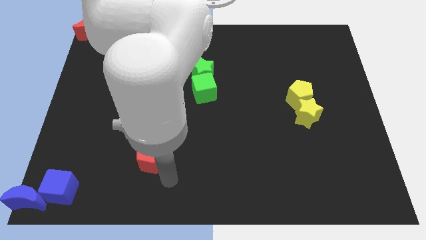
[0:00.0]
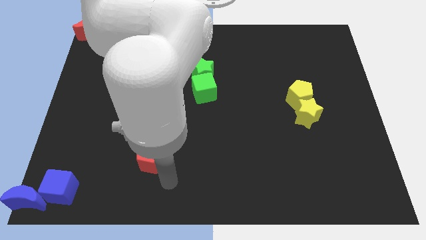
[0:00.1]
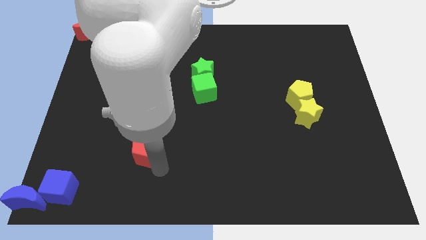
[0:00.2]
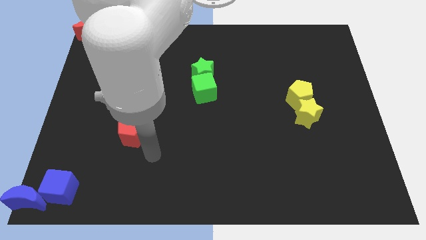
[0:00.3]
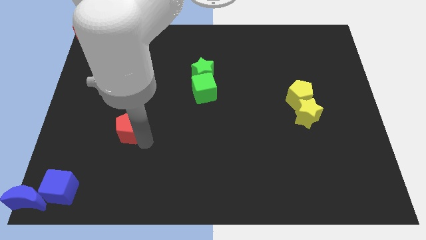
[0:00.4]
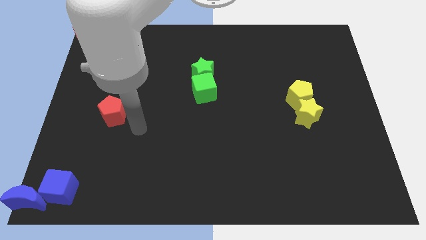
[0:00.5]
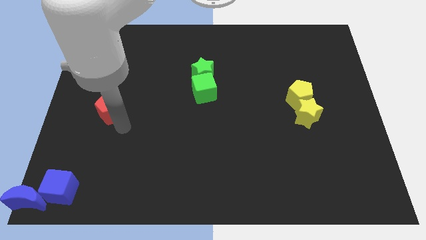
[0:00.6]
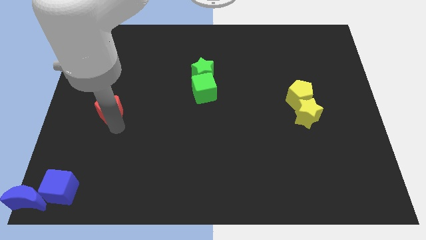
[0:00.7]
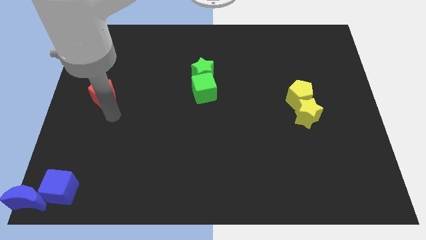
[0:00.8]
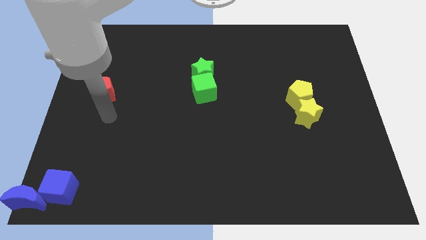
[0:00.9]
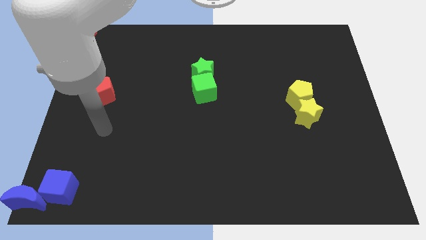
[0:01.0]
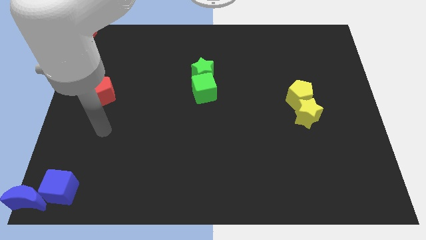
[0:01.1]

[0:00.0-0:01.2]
place the red pentagon towards the red crescent

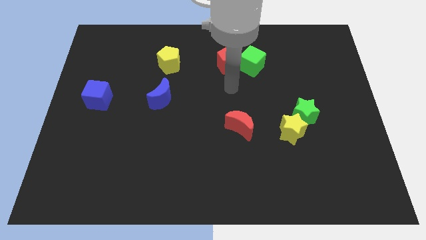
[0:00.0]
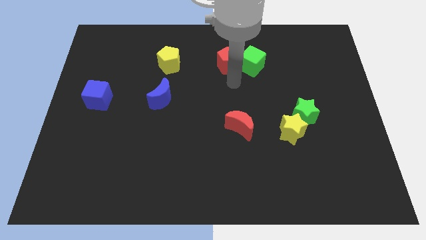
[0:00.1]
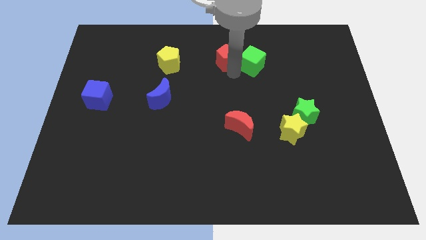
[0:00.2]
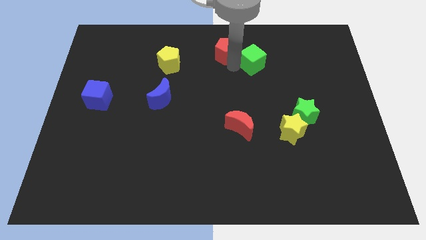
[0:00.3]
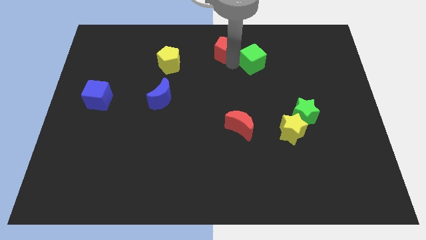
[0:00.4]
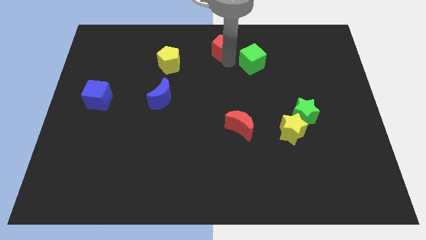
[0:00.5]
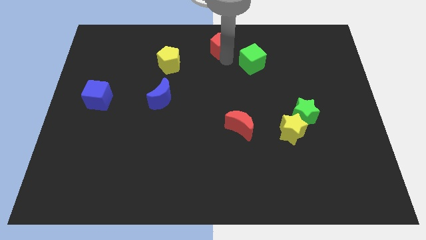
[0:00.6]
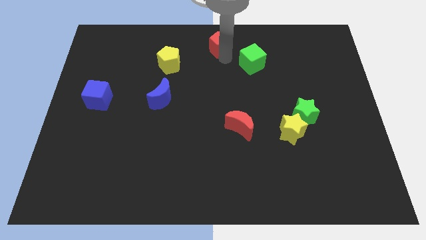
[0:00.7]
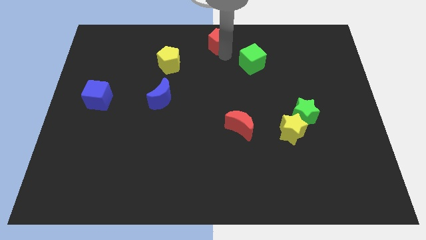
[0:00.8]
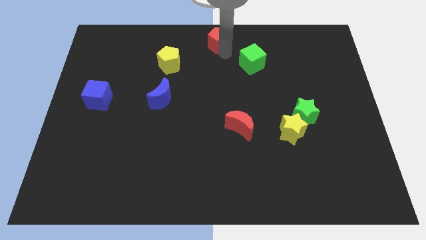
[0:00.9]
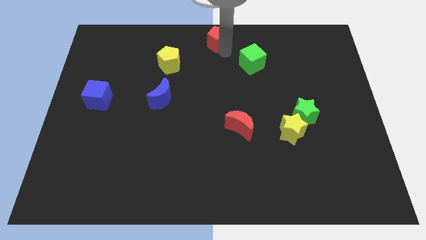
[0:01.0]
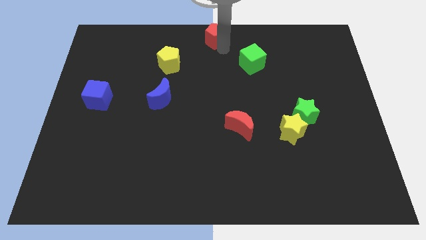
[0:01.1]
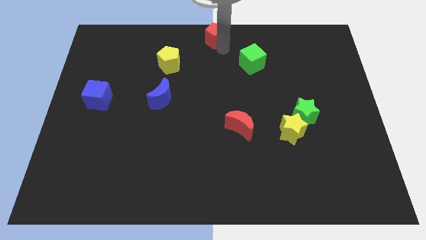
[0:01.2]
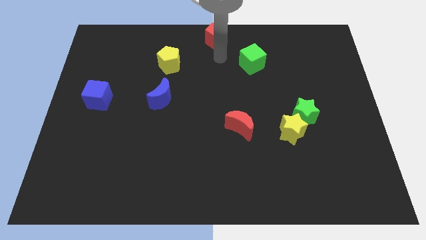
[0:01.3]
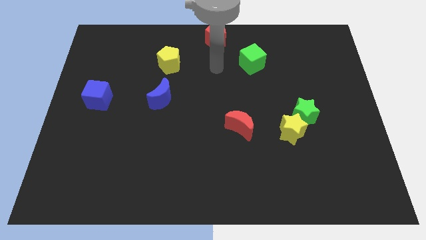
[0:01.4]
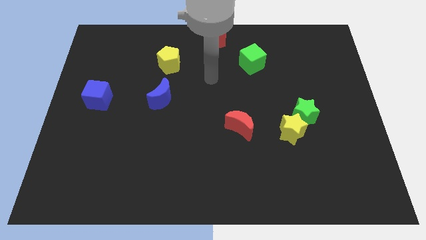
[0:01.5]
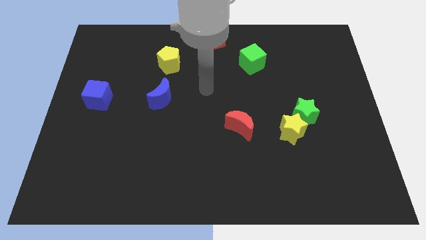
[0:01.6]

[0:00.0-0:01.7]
move red pentagon to the top center of the board

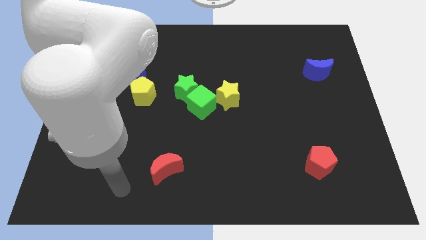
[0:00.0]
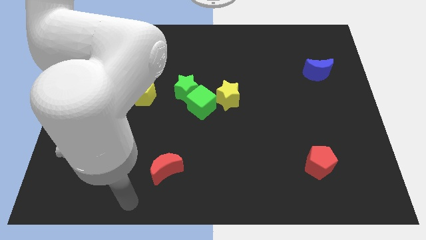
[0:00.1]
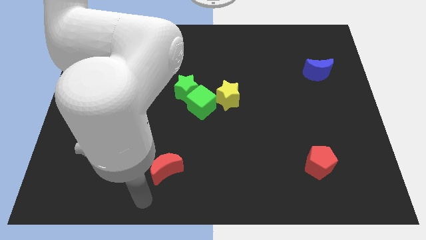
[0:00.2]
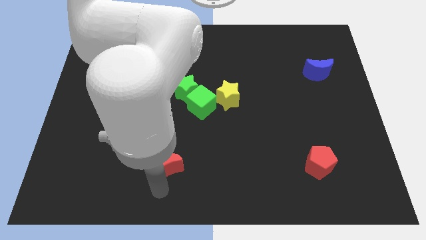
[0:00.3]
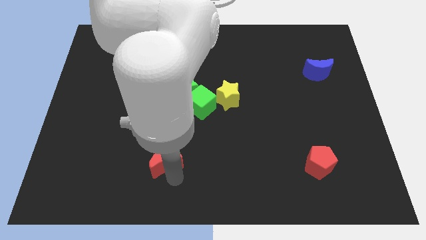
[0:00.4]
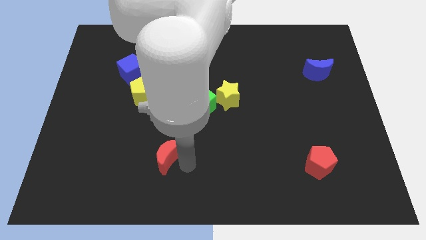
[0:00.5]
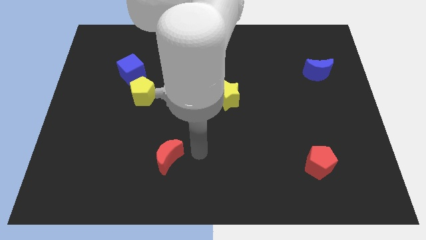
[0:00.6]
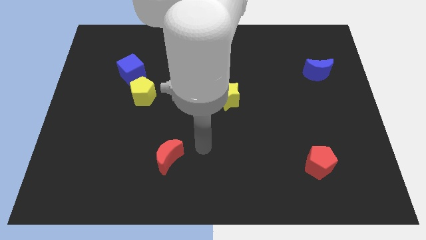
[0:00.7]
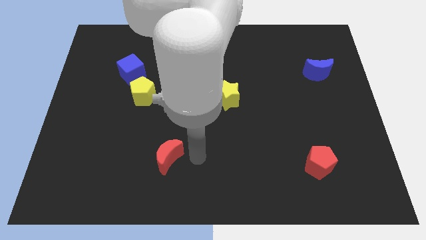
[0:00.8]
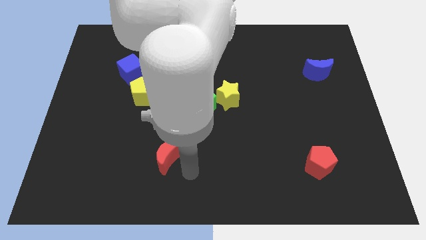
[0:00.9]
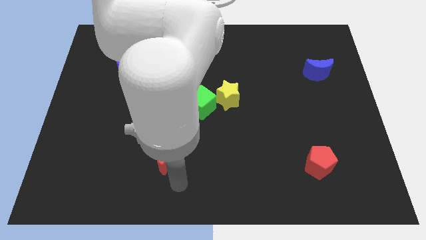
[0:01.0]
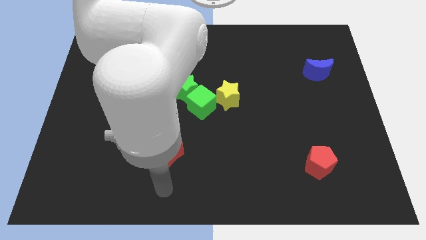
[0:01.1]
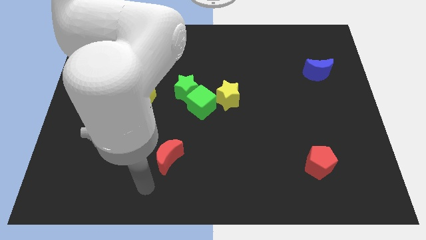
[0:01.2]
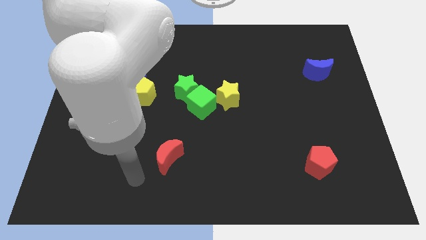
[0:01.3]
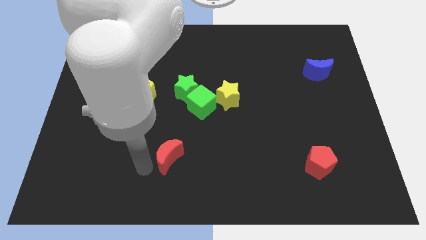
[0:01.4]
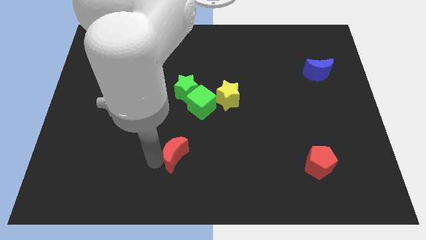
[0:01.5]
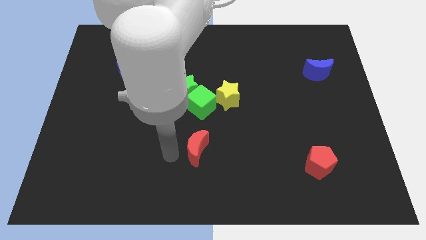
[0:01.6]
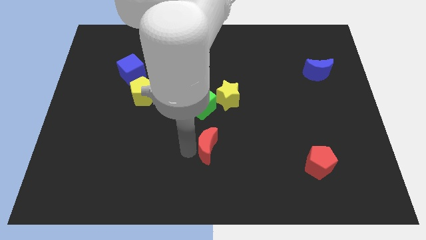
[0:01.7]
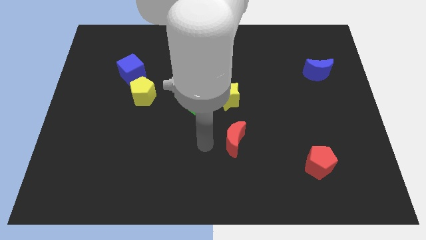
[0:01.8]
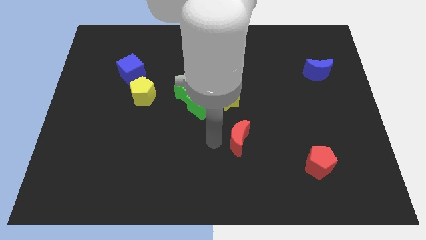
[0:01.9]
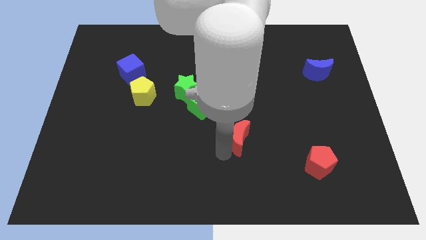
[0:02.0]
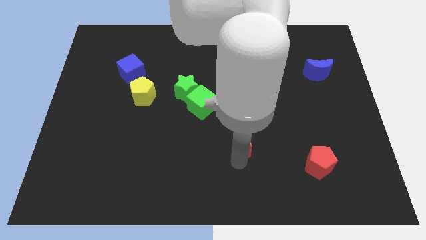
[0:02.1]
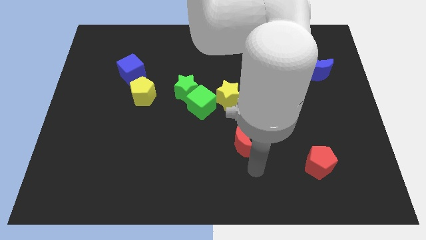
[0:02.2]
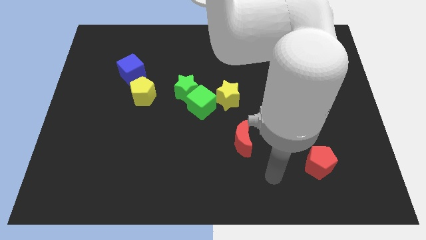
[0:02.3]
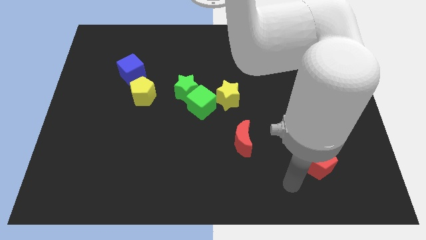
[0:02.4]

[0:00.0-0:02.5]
place the red moon below the yellow star

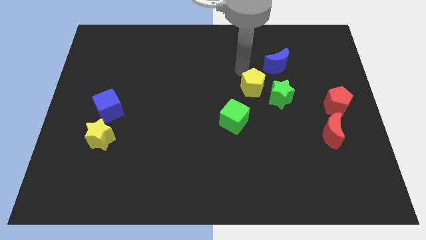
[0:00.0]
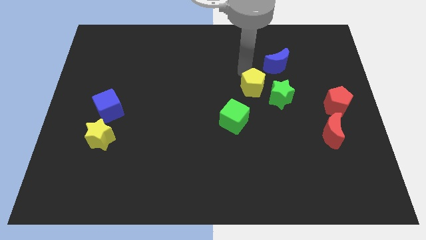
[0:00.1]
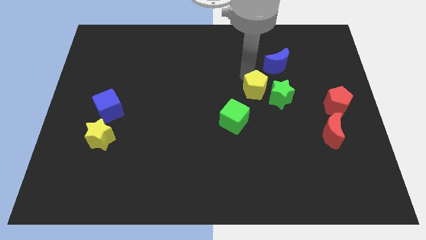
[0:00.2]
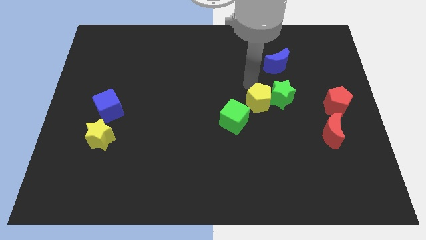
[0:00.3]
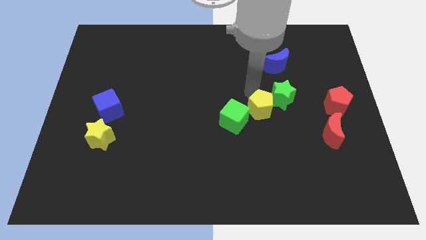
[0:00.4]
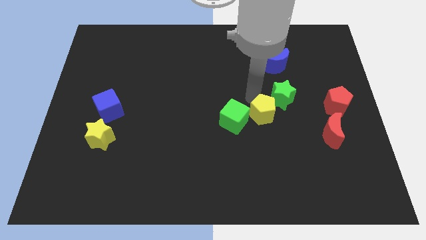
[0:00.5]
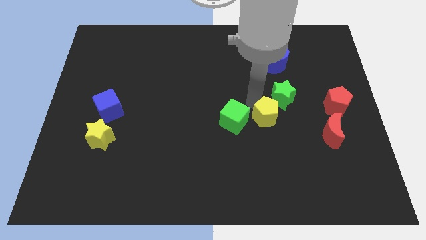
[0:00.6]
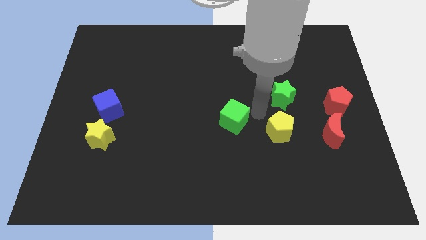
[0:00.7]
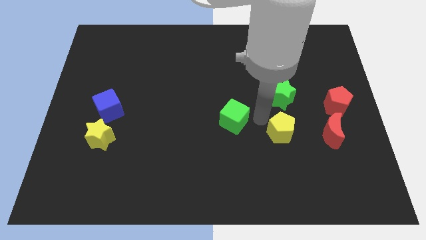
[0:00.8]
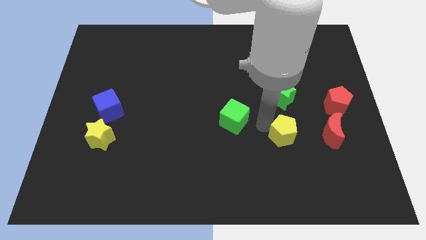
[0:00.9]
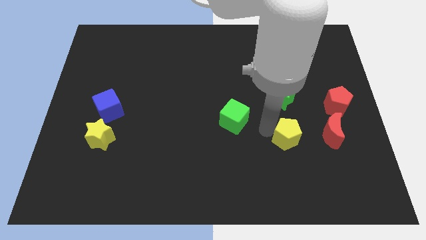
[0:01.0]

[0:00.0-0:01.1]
push the yellow pentagon to the bottom of the green star

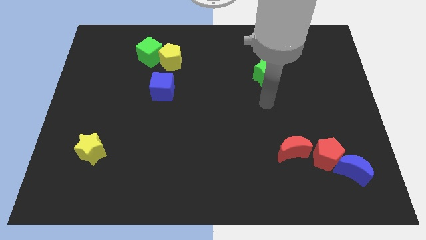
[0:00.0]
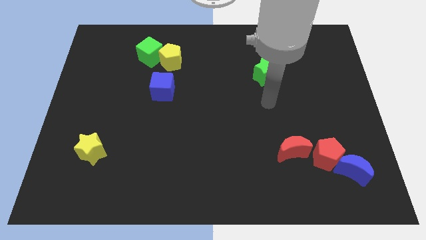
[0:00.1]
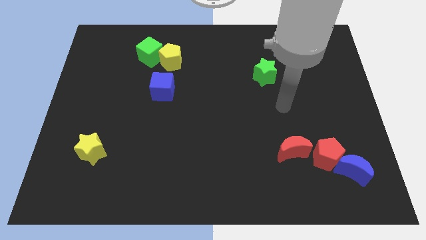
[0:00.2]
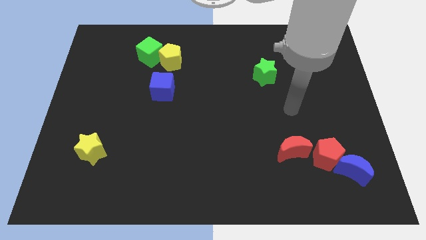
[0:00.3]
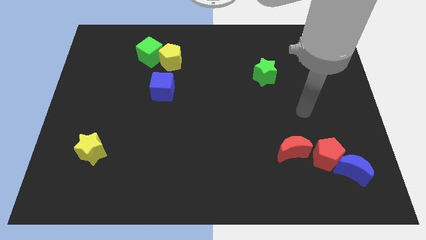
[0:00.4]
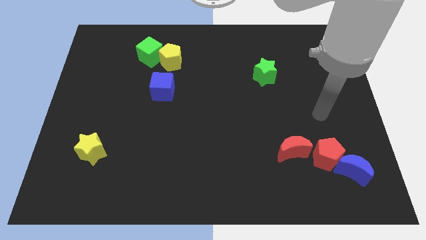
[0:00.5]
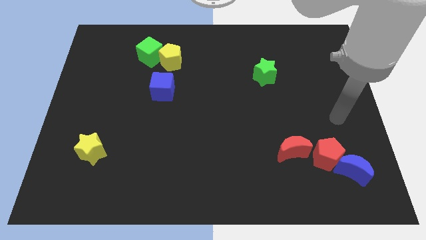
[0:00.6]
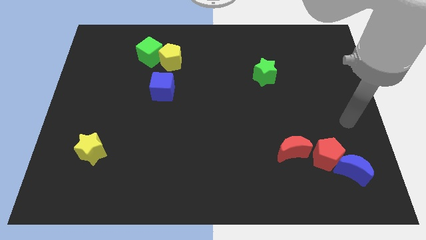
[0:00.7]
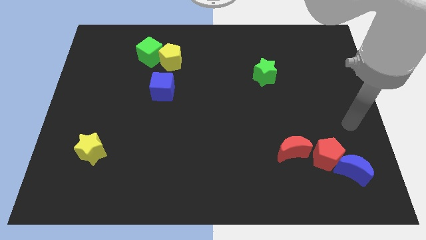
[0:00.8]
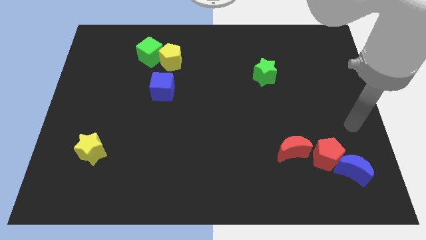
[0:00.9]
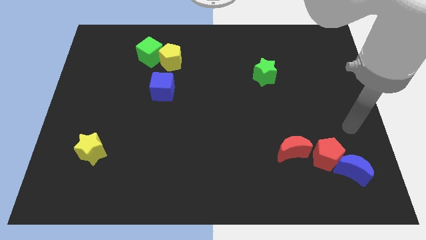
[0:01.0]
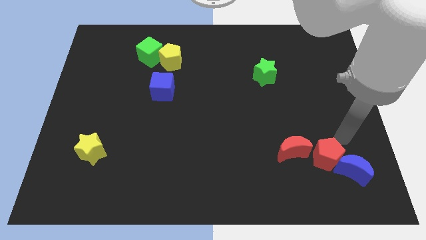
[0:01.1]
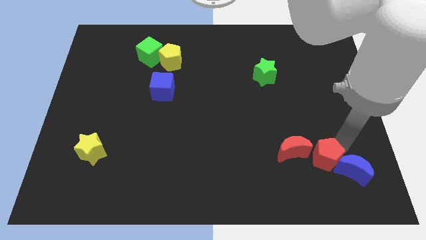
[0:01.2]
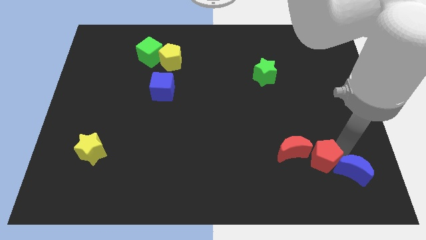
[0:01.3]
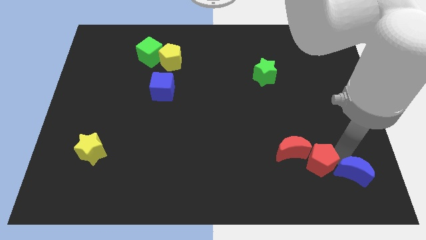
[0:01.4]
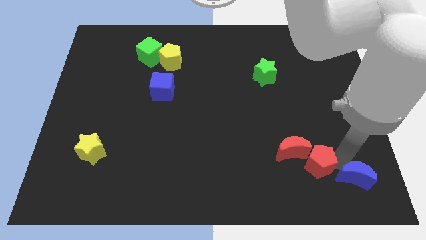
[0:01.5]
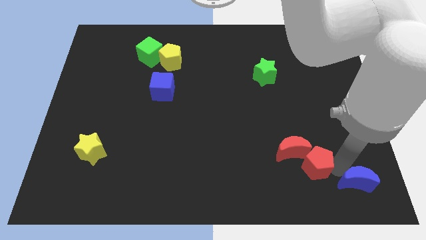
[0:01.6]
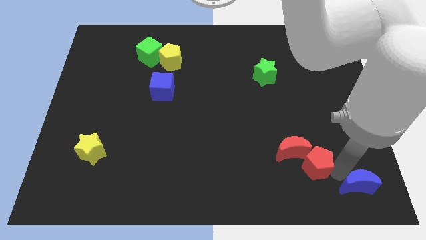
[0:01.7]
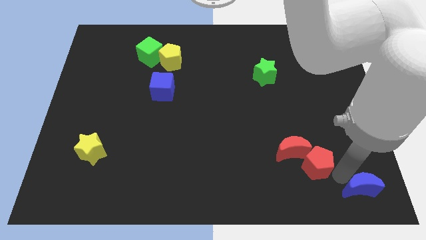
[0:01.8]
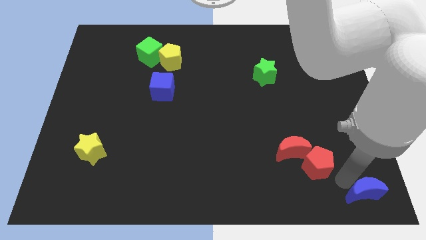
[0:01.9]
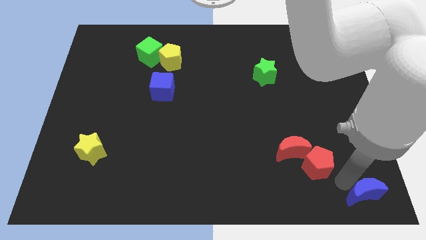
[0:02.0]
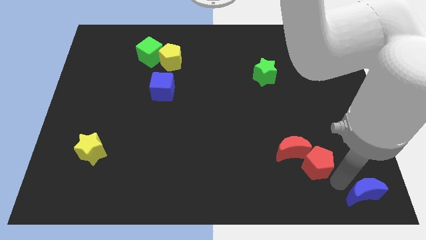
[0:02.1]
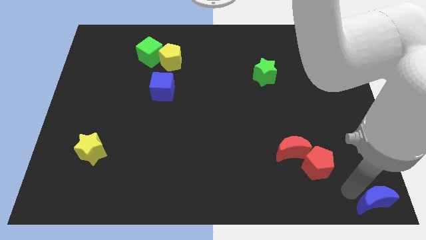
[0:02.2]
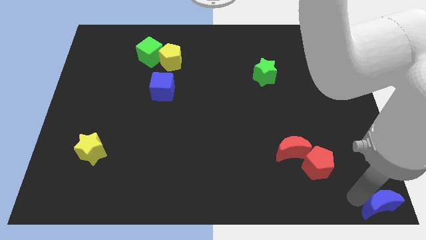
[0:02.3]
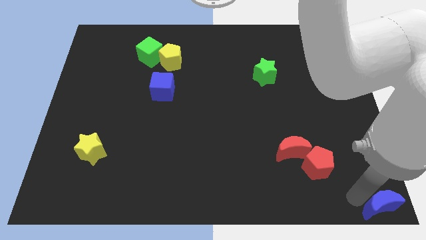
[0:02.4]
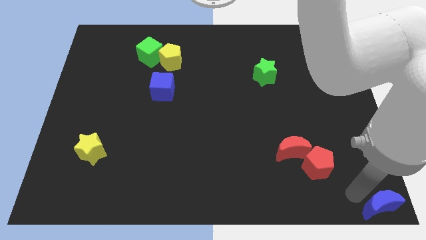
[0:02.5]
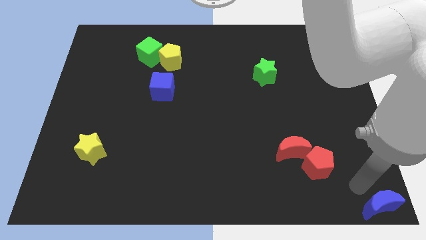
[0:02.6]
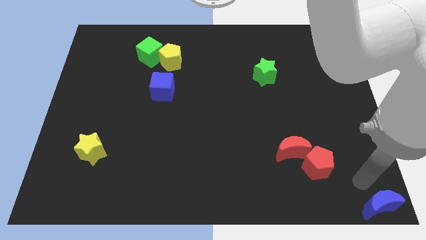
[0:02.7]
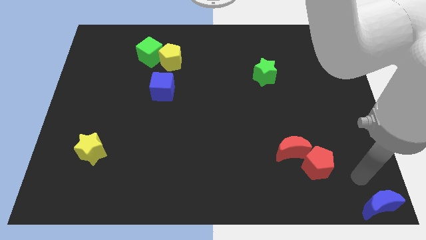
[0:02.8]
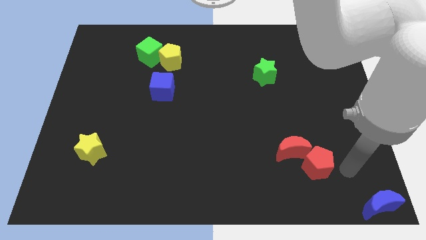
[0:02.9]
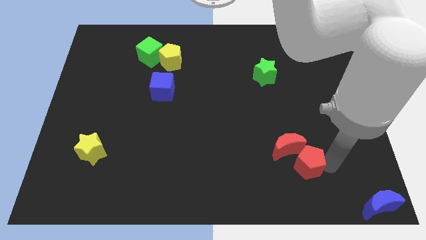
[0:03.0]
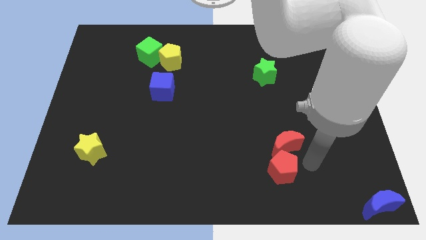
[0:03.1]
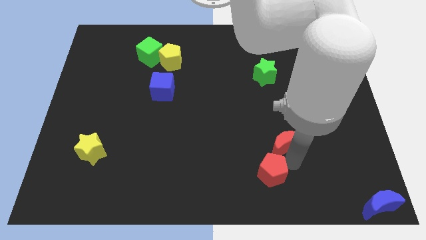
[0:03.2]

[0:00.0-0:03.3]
move the blue moon into the bottom right corner
